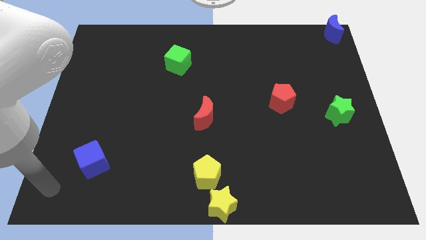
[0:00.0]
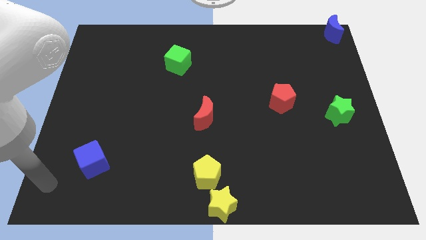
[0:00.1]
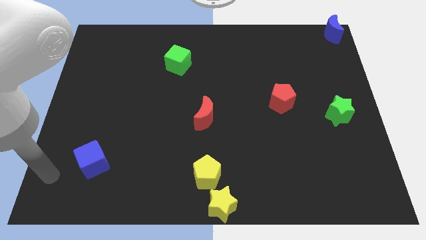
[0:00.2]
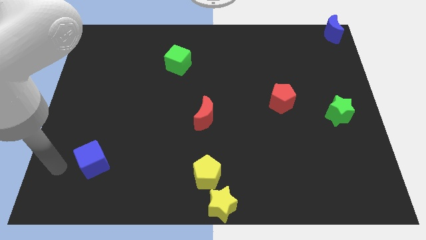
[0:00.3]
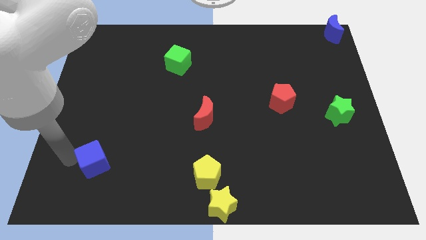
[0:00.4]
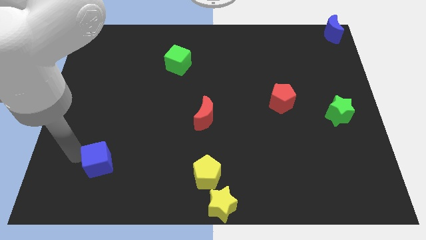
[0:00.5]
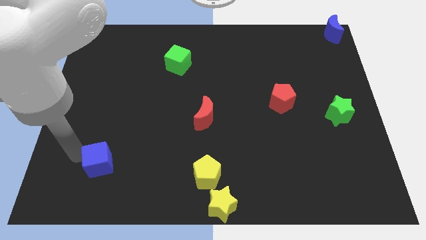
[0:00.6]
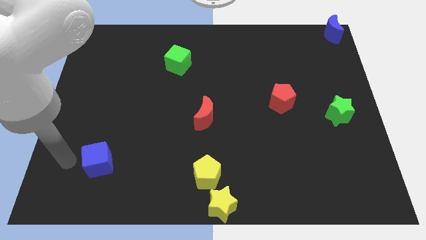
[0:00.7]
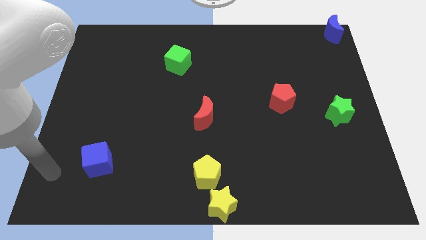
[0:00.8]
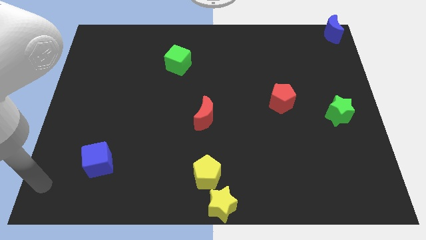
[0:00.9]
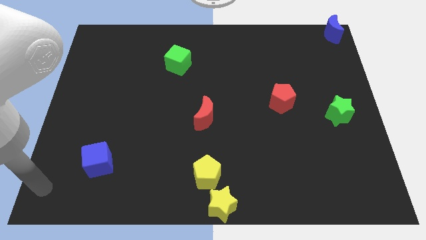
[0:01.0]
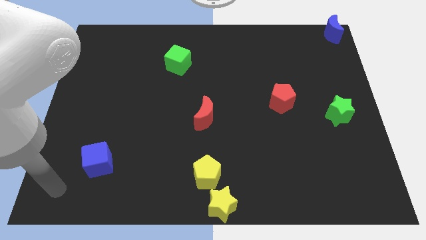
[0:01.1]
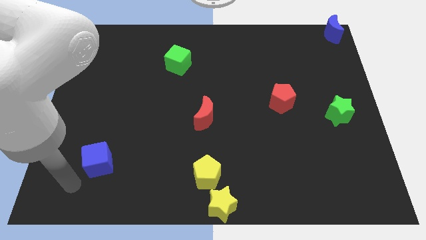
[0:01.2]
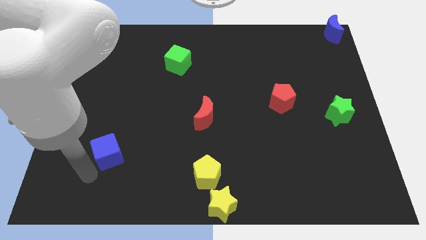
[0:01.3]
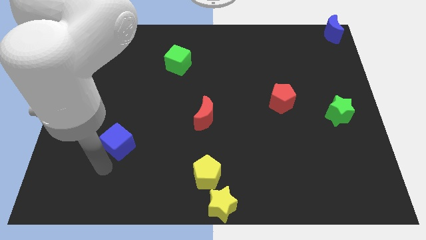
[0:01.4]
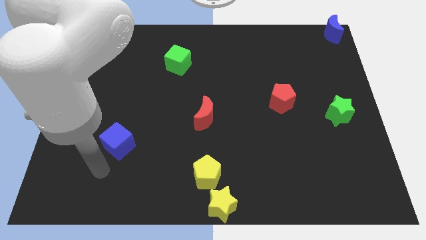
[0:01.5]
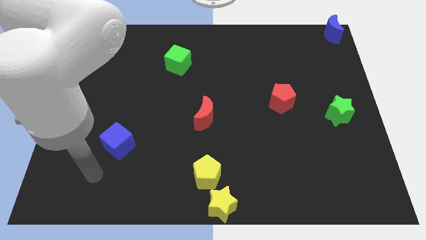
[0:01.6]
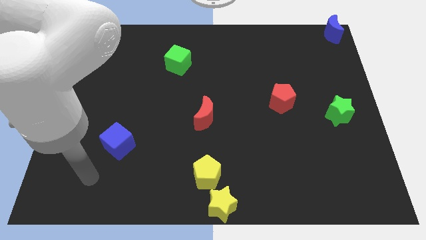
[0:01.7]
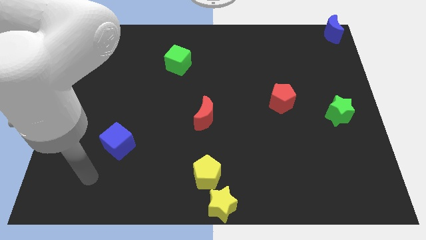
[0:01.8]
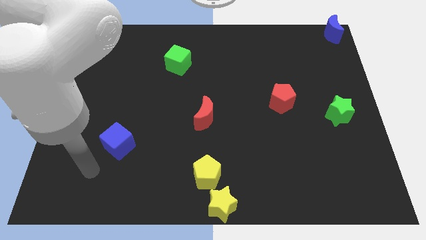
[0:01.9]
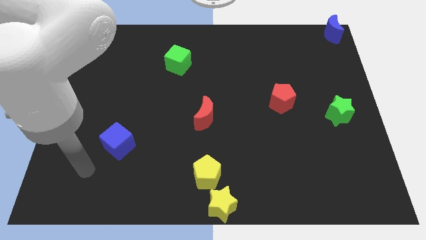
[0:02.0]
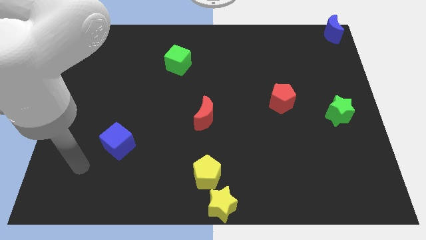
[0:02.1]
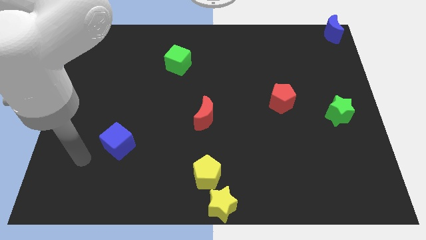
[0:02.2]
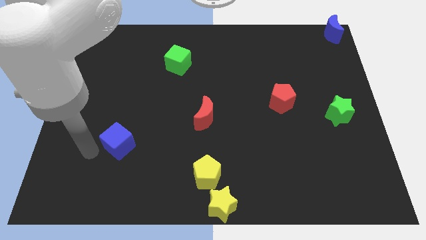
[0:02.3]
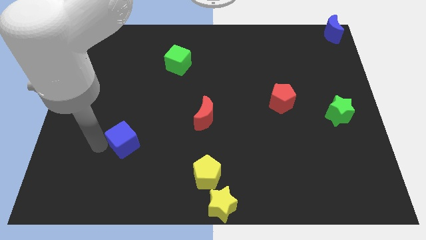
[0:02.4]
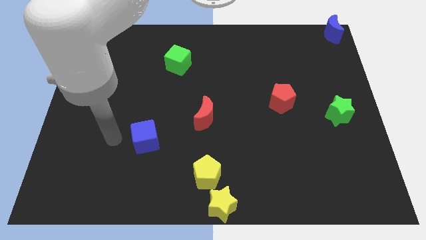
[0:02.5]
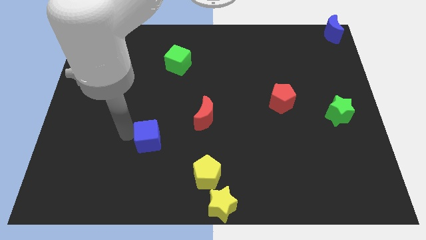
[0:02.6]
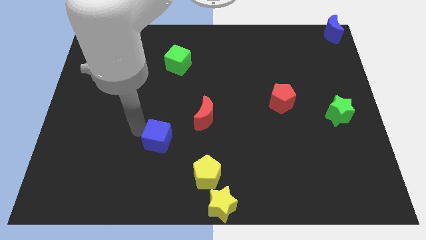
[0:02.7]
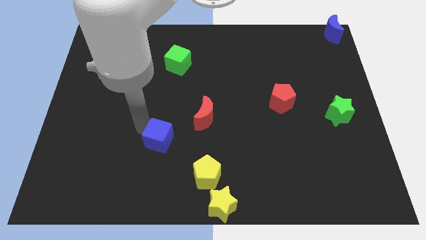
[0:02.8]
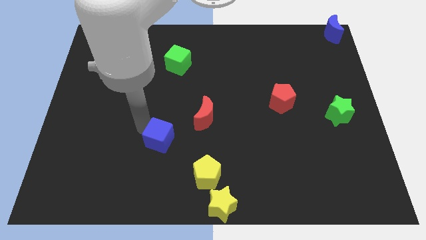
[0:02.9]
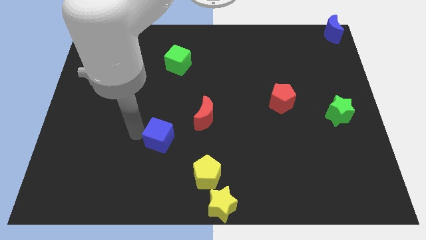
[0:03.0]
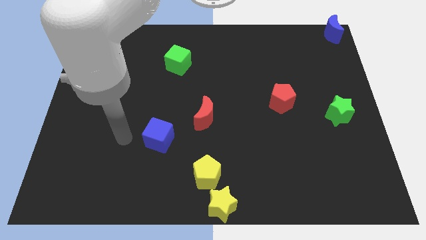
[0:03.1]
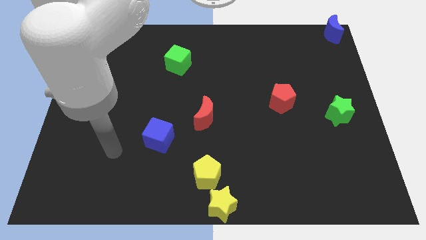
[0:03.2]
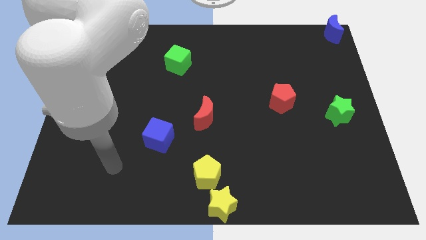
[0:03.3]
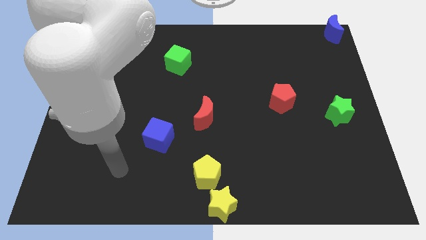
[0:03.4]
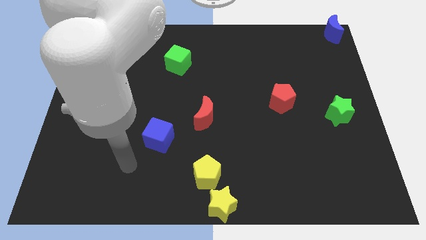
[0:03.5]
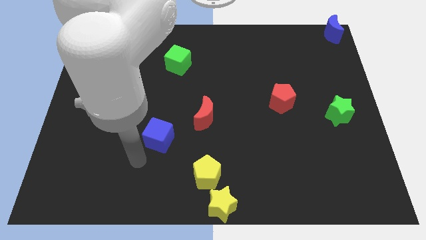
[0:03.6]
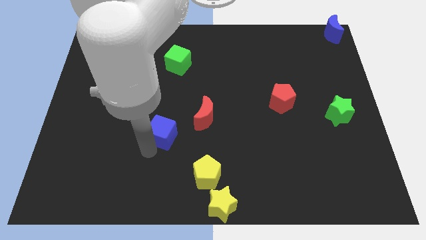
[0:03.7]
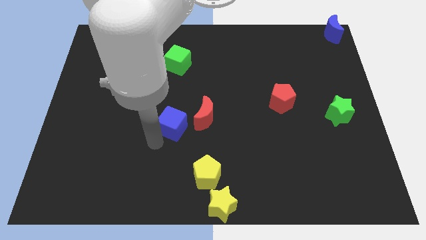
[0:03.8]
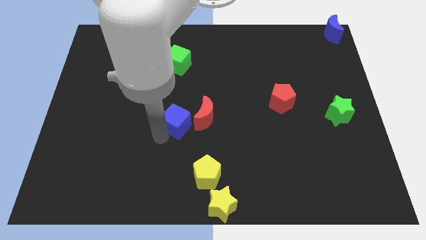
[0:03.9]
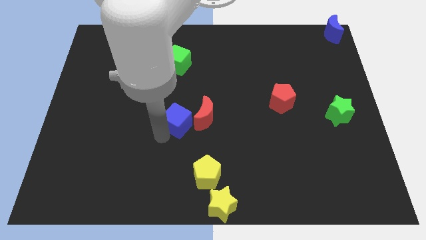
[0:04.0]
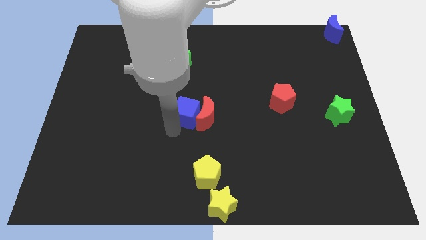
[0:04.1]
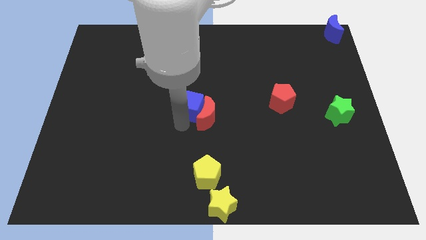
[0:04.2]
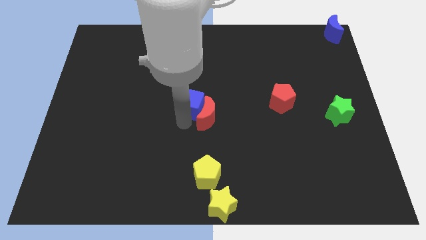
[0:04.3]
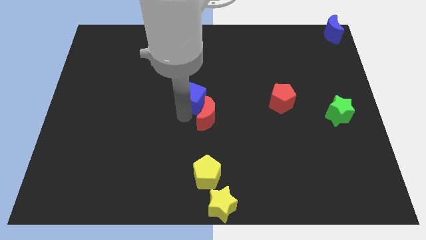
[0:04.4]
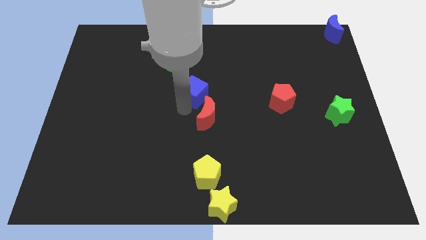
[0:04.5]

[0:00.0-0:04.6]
place the blue cube in between green cube and red crecent

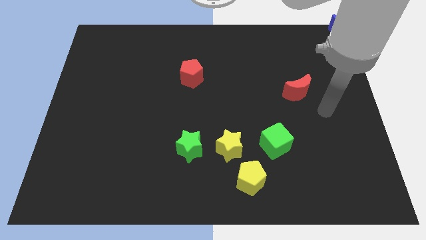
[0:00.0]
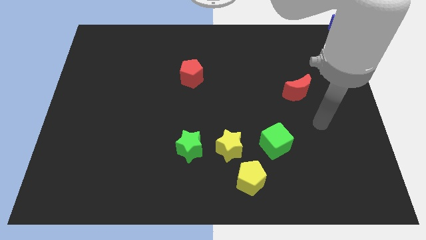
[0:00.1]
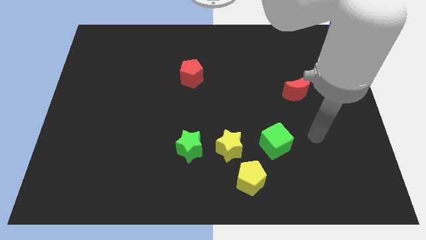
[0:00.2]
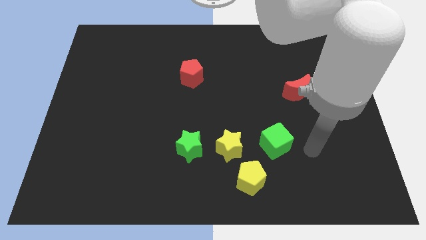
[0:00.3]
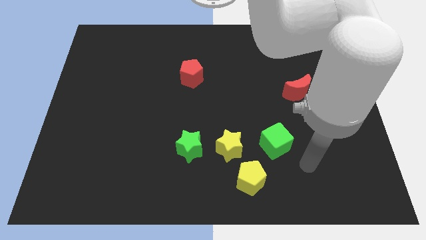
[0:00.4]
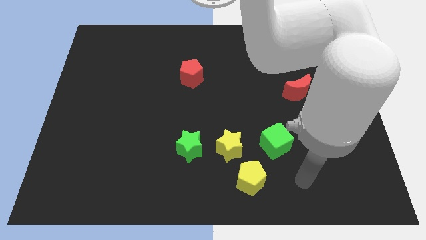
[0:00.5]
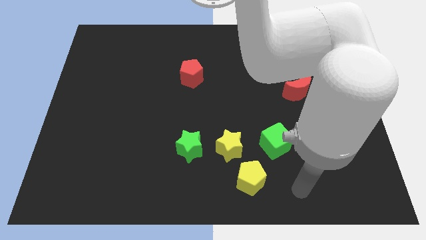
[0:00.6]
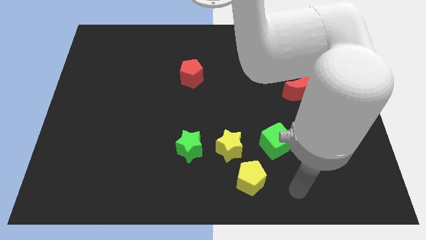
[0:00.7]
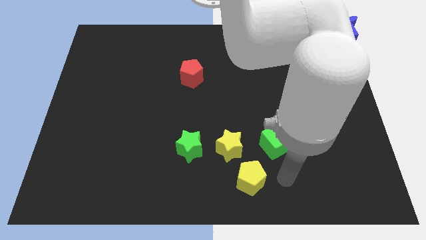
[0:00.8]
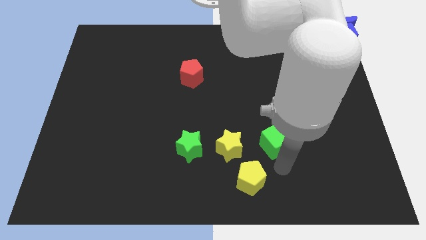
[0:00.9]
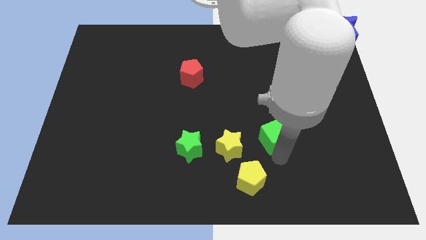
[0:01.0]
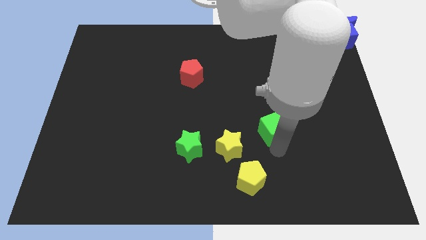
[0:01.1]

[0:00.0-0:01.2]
touch the bottom of green cube

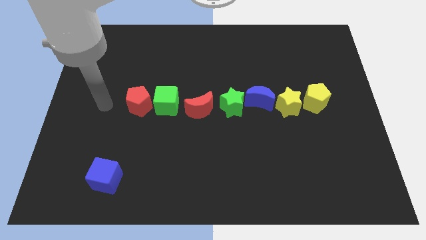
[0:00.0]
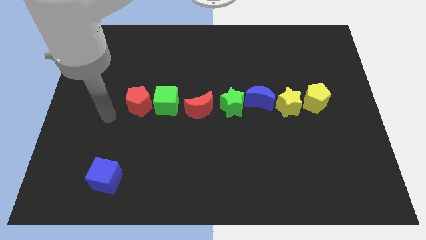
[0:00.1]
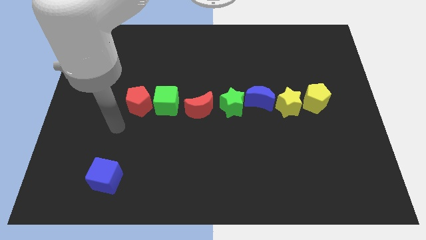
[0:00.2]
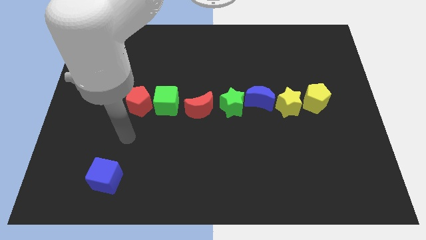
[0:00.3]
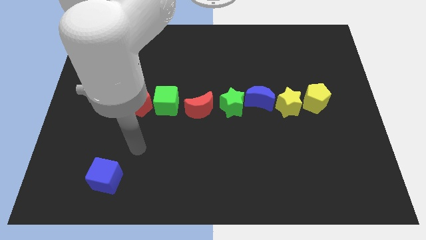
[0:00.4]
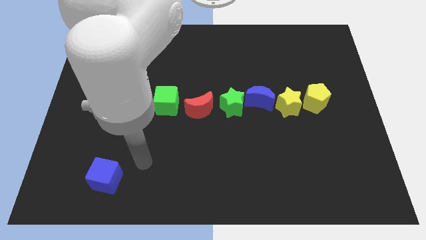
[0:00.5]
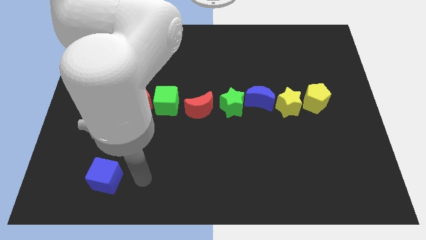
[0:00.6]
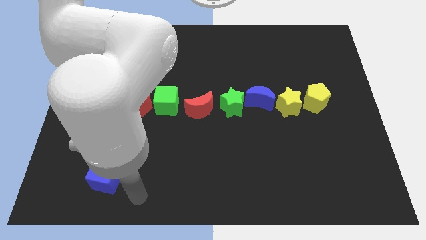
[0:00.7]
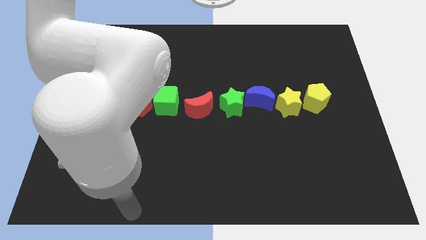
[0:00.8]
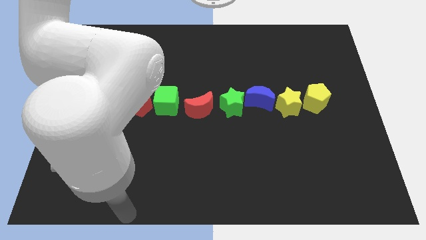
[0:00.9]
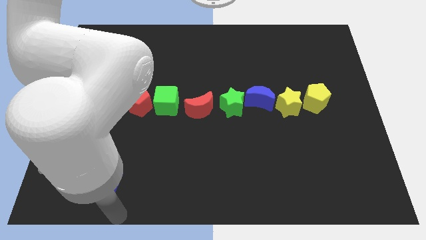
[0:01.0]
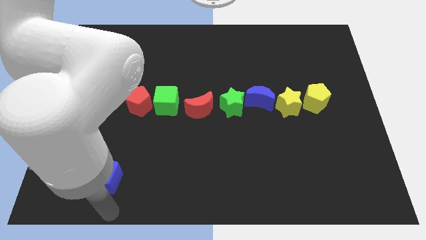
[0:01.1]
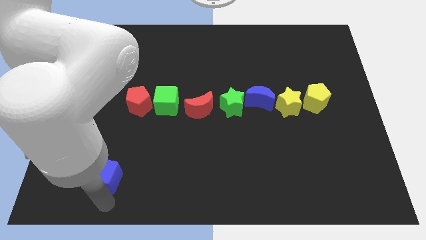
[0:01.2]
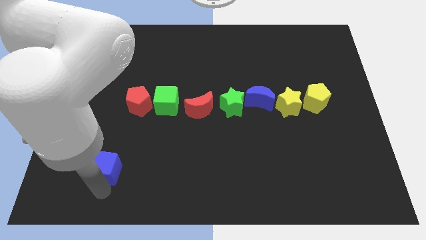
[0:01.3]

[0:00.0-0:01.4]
place the arm down to the blue cube

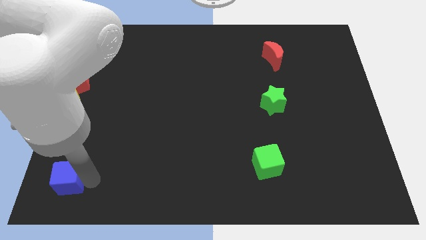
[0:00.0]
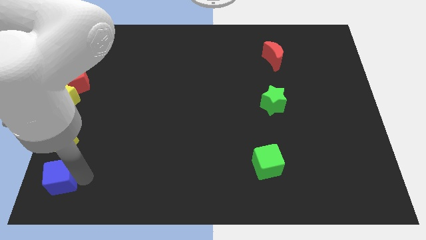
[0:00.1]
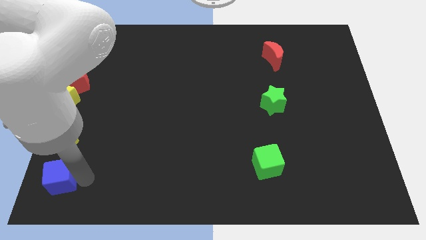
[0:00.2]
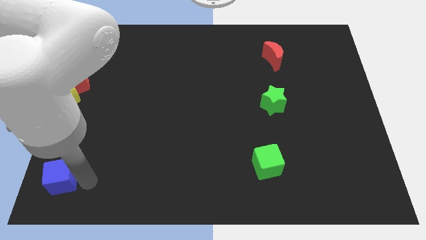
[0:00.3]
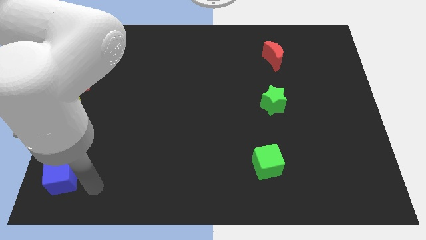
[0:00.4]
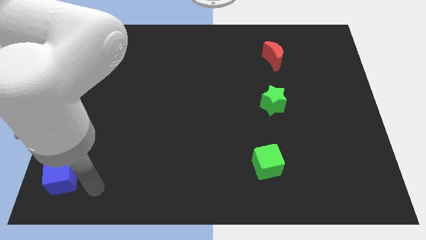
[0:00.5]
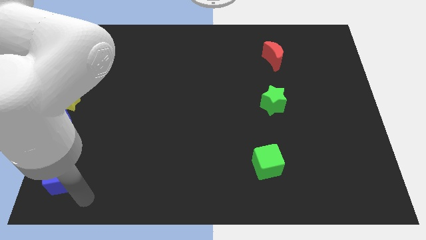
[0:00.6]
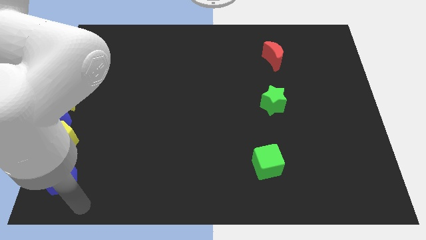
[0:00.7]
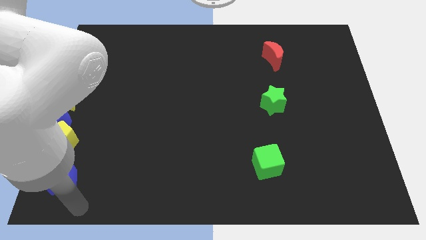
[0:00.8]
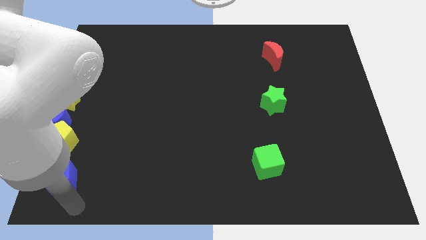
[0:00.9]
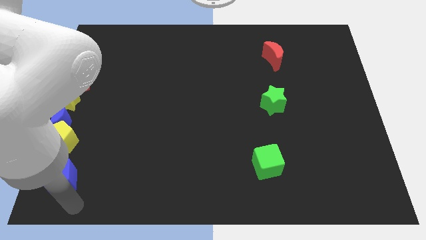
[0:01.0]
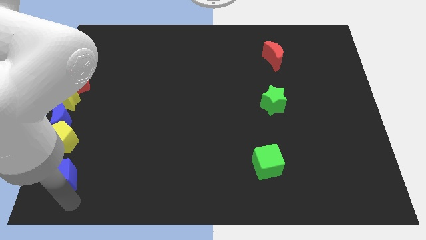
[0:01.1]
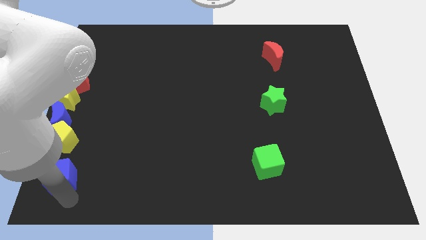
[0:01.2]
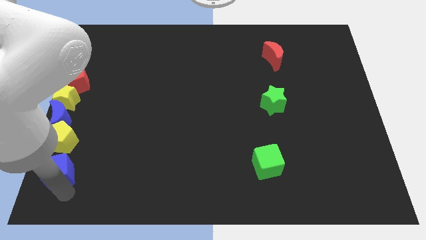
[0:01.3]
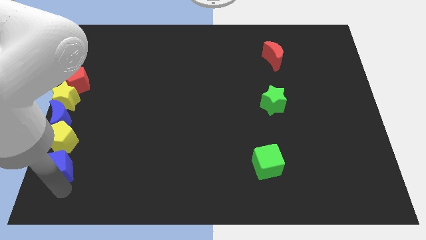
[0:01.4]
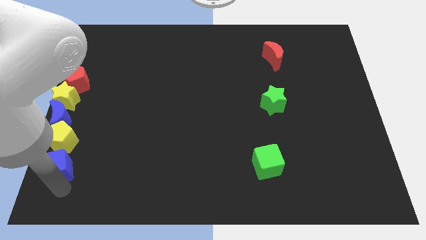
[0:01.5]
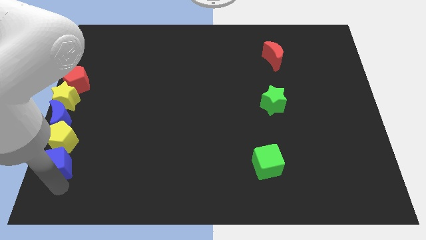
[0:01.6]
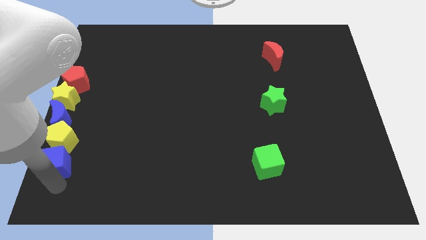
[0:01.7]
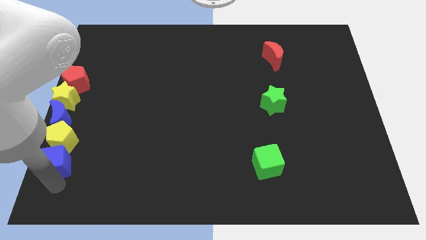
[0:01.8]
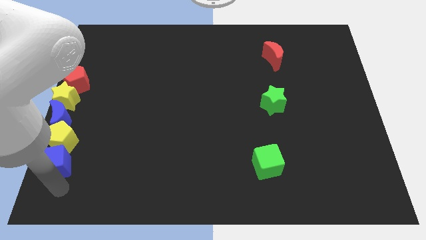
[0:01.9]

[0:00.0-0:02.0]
place the blue cube into the yellow pentagon
